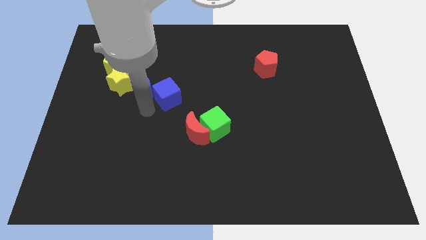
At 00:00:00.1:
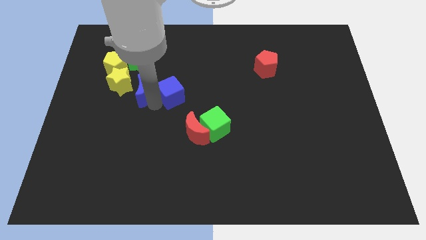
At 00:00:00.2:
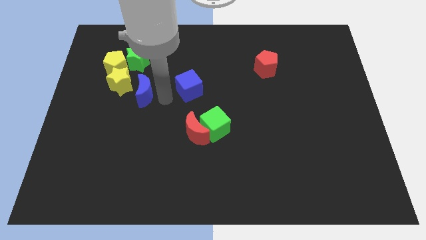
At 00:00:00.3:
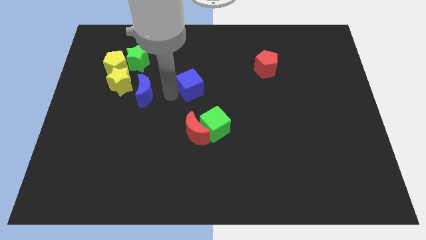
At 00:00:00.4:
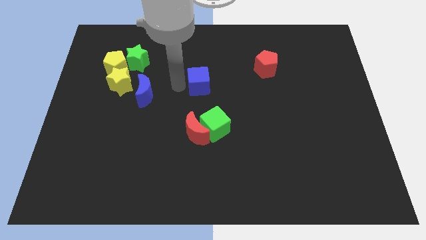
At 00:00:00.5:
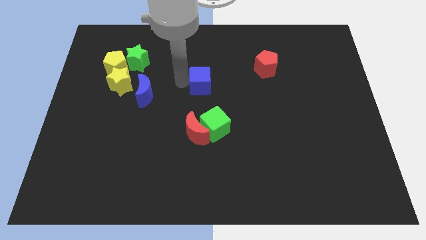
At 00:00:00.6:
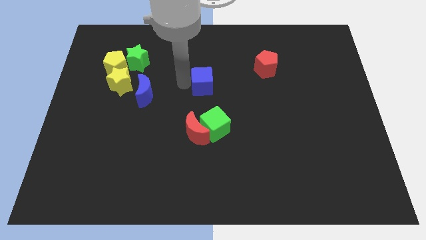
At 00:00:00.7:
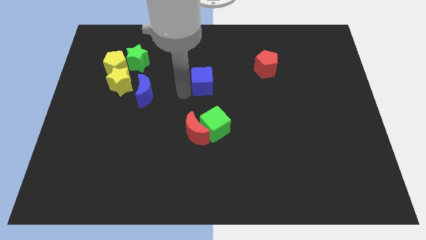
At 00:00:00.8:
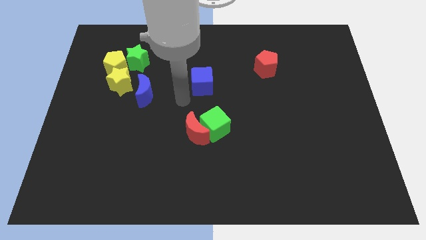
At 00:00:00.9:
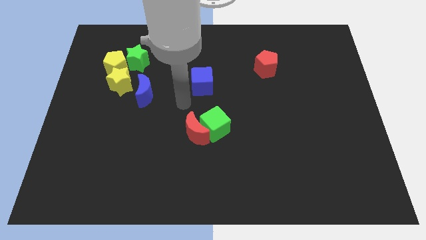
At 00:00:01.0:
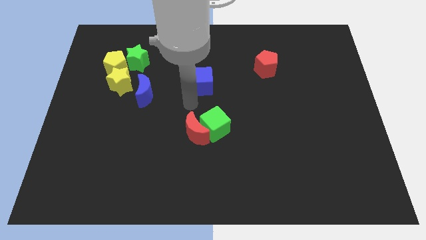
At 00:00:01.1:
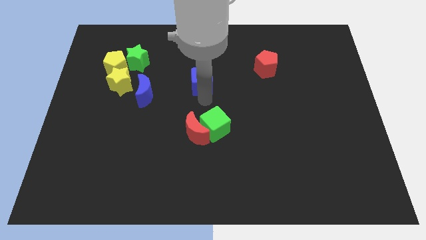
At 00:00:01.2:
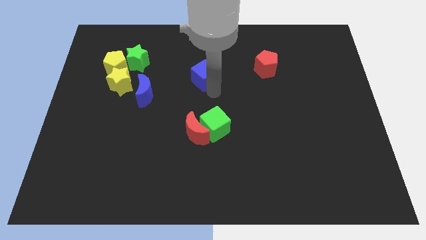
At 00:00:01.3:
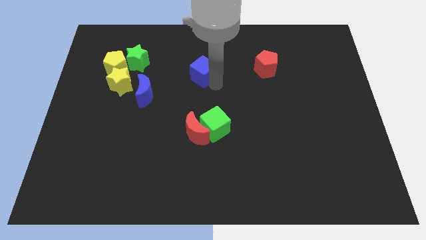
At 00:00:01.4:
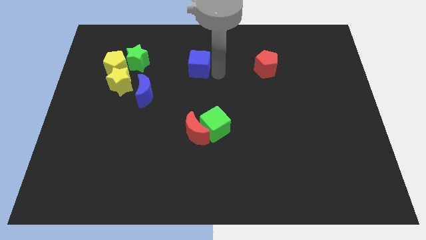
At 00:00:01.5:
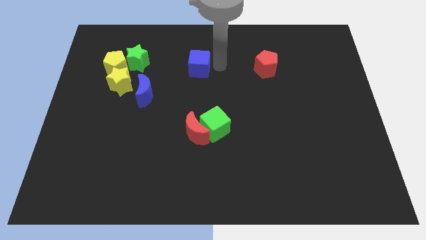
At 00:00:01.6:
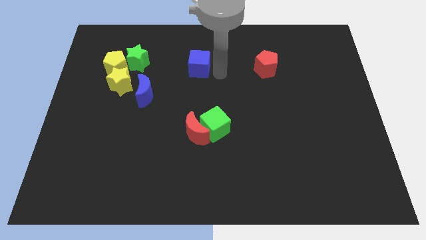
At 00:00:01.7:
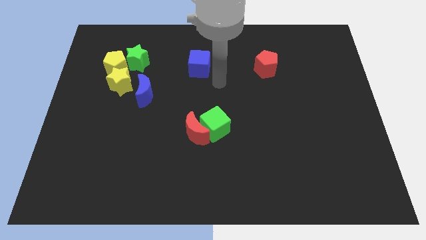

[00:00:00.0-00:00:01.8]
place the blue cube to the left of the red pentagon

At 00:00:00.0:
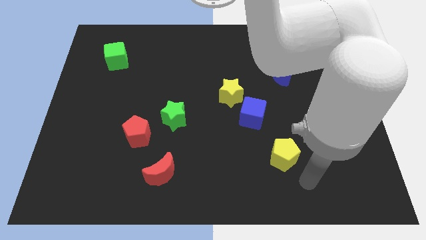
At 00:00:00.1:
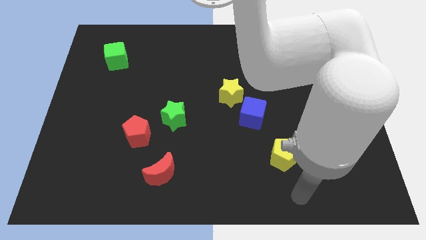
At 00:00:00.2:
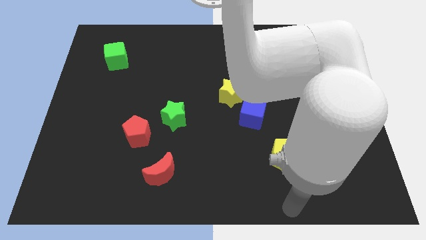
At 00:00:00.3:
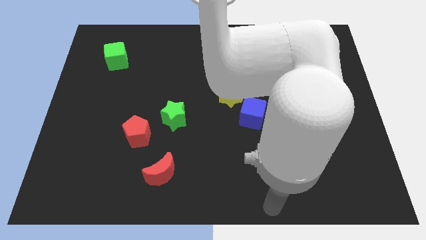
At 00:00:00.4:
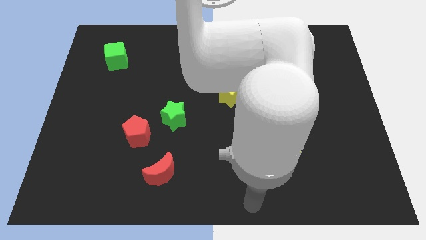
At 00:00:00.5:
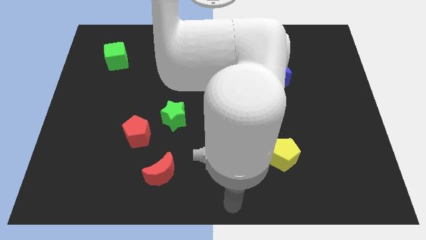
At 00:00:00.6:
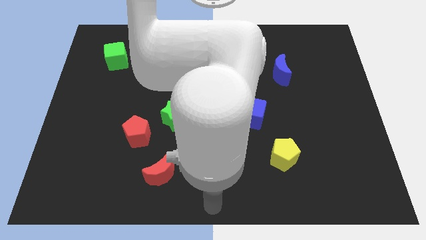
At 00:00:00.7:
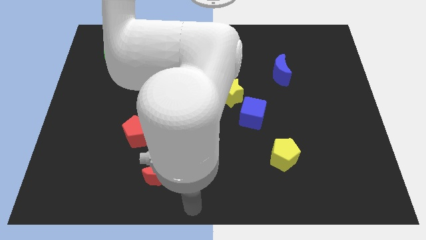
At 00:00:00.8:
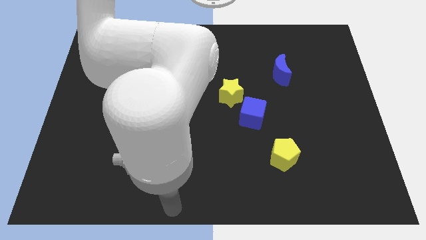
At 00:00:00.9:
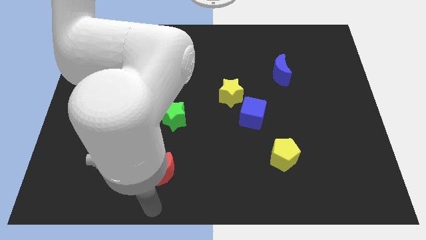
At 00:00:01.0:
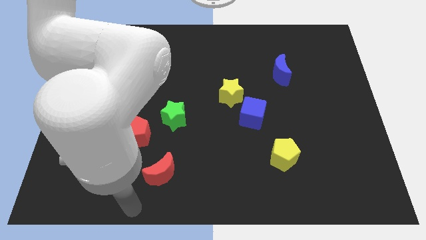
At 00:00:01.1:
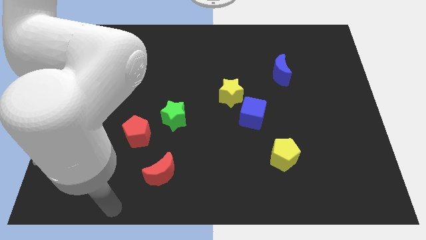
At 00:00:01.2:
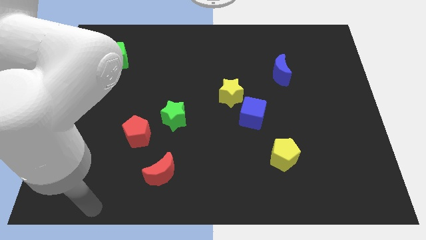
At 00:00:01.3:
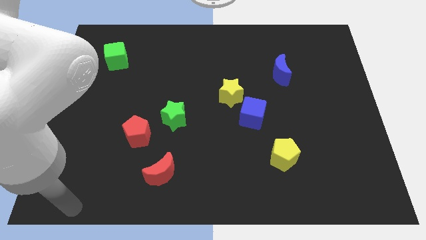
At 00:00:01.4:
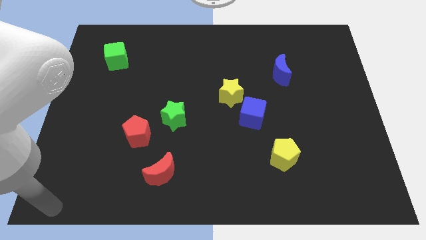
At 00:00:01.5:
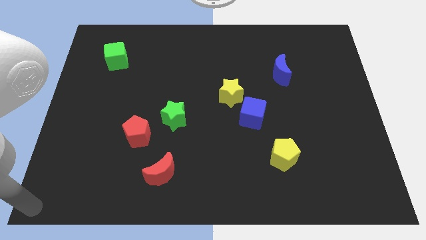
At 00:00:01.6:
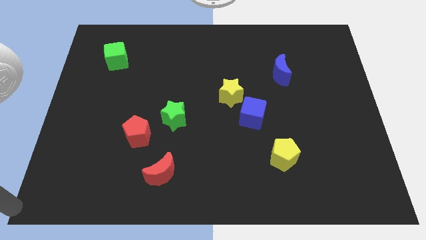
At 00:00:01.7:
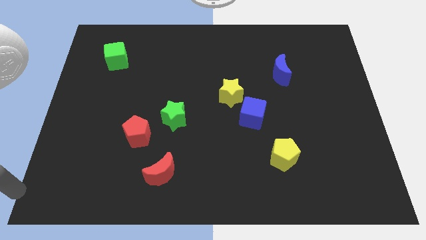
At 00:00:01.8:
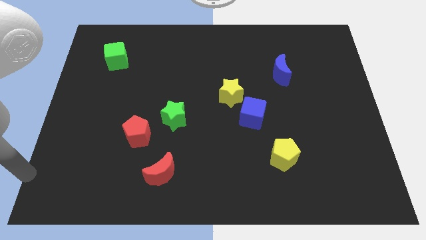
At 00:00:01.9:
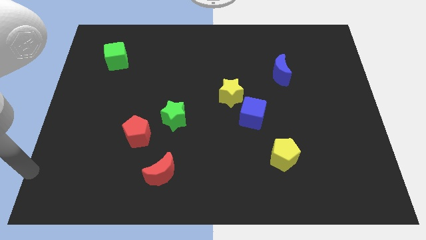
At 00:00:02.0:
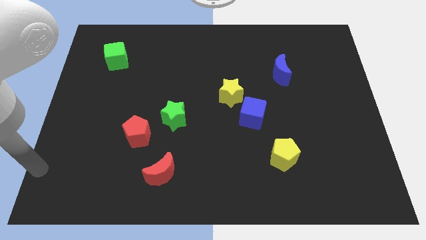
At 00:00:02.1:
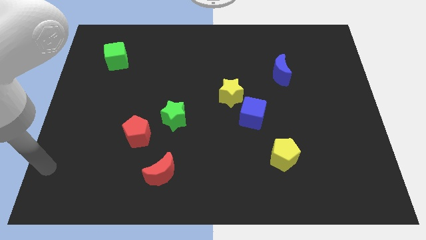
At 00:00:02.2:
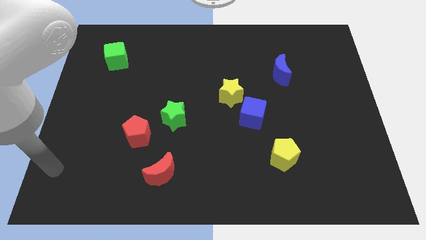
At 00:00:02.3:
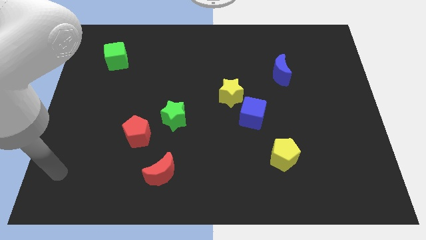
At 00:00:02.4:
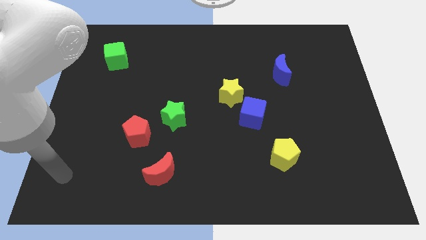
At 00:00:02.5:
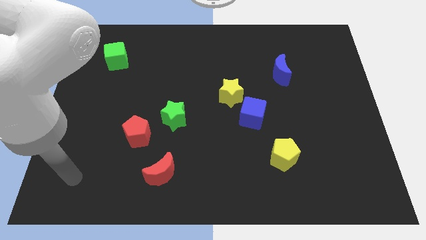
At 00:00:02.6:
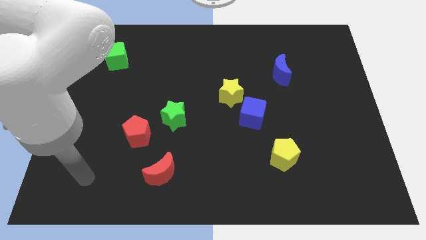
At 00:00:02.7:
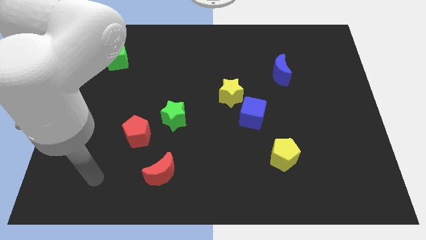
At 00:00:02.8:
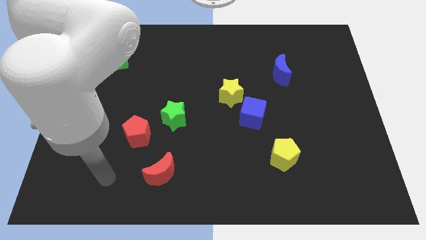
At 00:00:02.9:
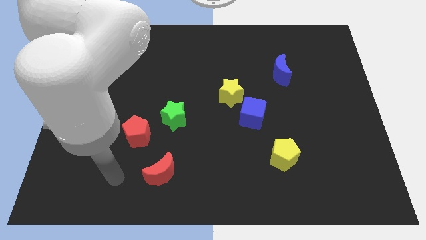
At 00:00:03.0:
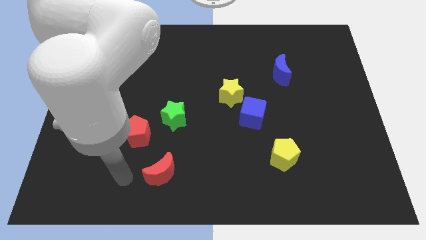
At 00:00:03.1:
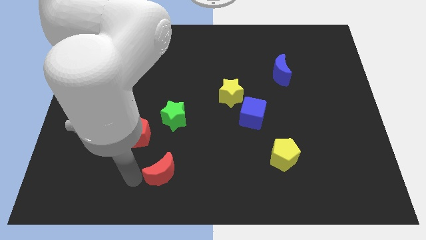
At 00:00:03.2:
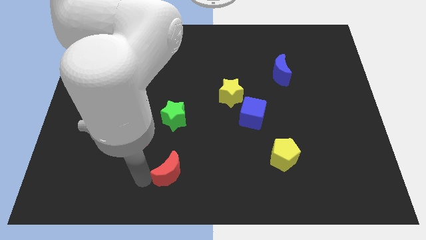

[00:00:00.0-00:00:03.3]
move your arm to the left side of the red moon

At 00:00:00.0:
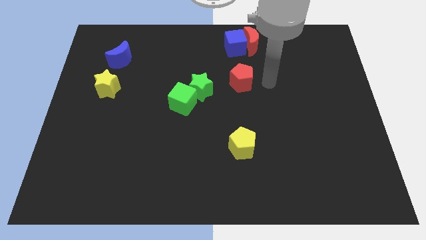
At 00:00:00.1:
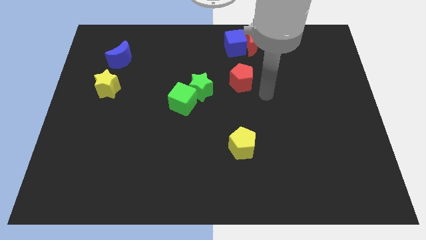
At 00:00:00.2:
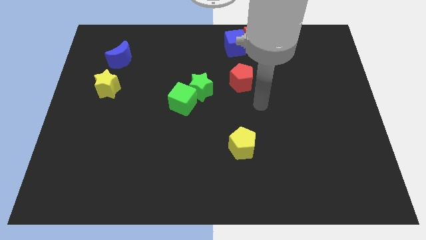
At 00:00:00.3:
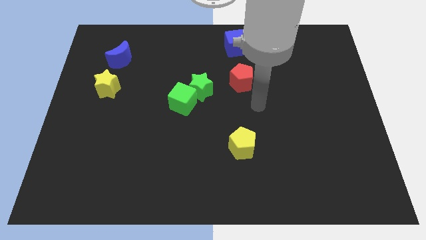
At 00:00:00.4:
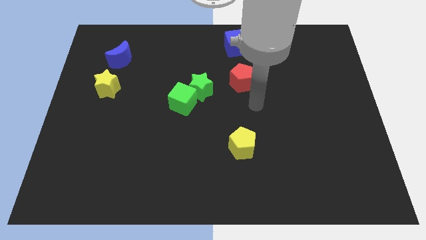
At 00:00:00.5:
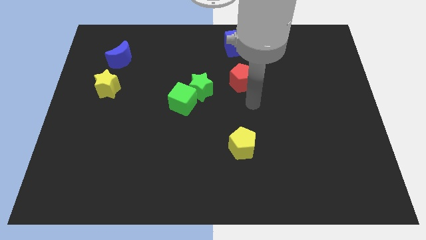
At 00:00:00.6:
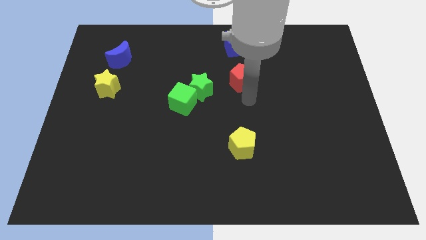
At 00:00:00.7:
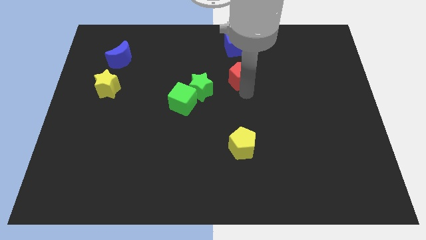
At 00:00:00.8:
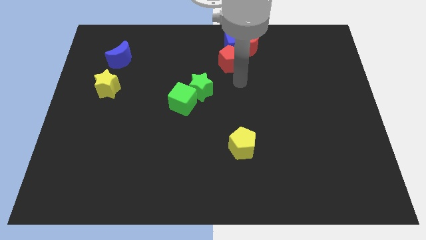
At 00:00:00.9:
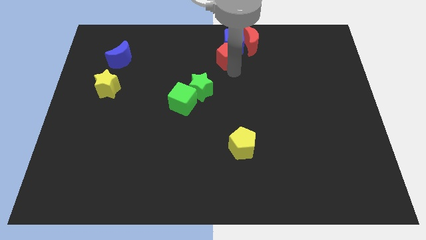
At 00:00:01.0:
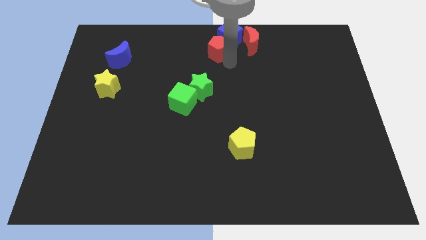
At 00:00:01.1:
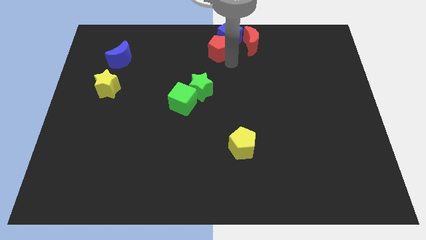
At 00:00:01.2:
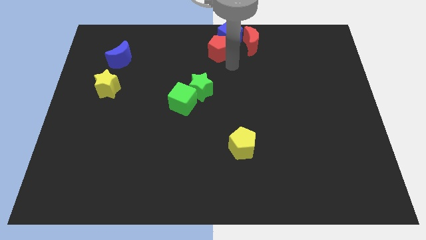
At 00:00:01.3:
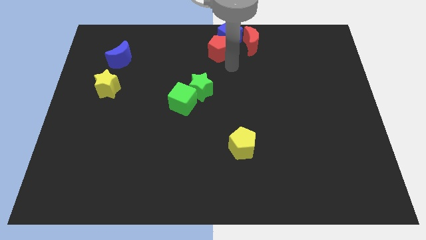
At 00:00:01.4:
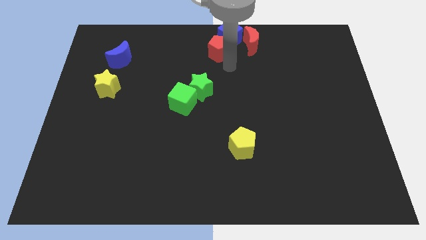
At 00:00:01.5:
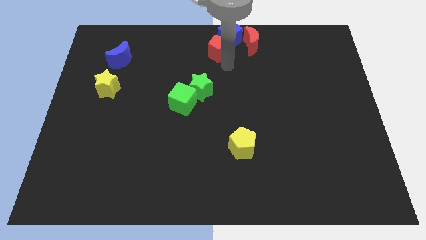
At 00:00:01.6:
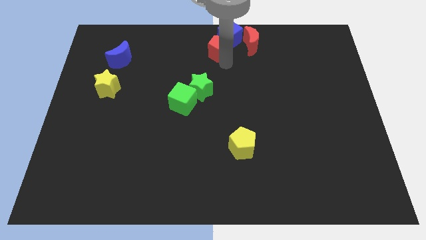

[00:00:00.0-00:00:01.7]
move the red pentagon into the blue cube

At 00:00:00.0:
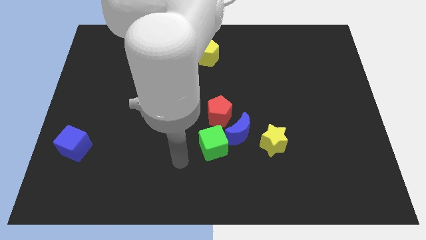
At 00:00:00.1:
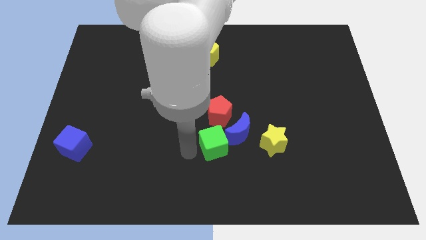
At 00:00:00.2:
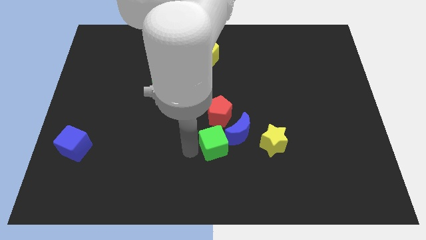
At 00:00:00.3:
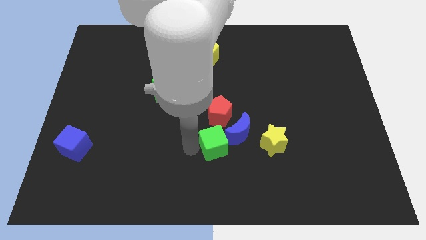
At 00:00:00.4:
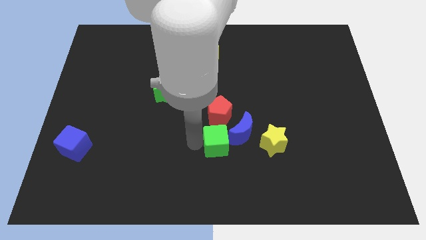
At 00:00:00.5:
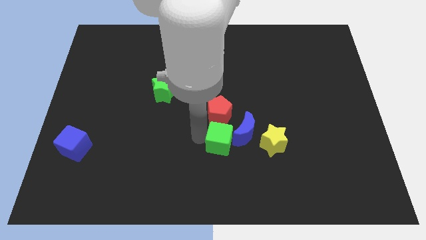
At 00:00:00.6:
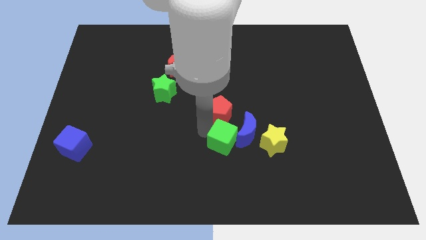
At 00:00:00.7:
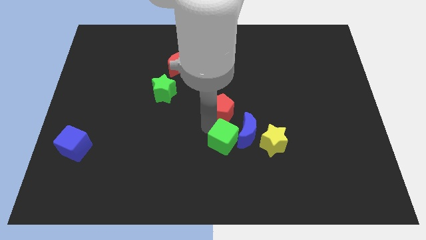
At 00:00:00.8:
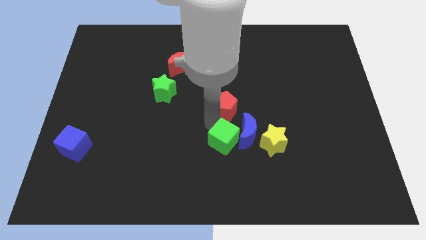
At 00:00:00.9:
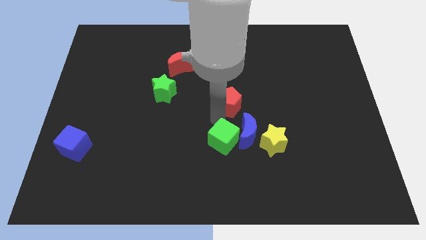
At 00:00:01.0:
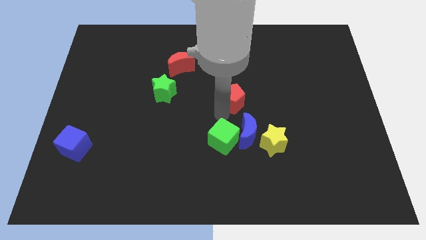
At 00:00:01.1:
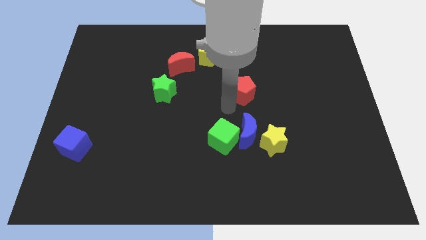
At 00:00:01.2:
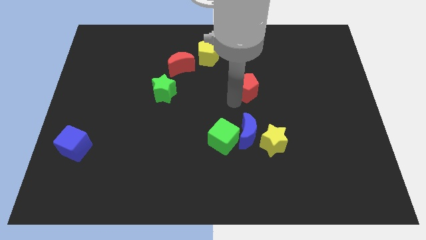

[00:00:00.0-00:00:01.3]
push the red pentagon above the blue crescent

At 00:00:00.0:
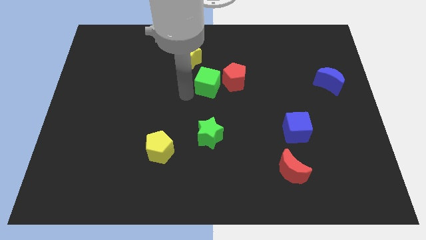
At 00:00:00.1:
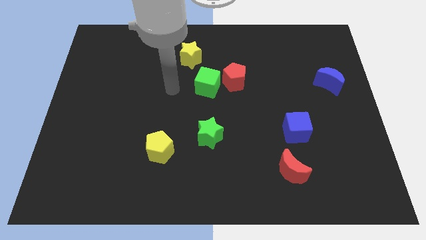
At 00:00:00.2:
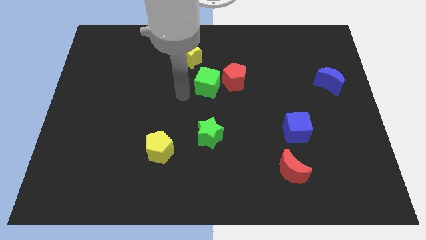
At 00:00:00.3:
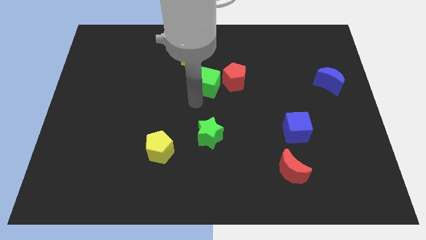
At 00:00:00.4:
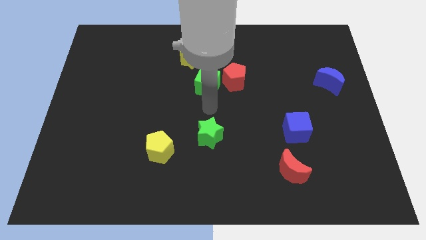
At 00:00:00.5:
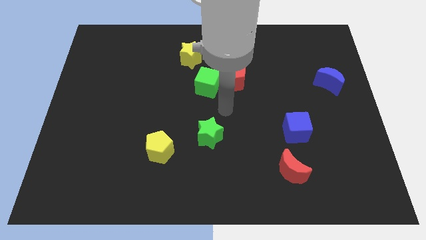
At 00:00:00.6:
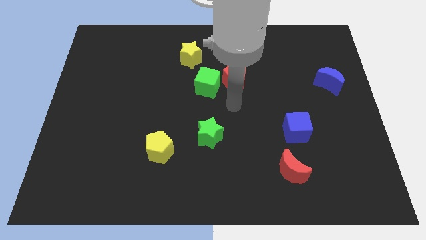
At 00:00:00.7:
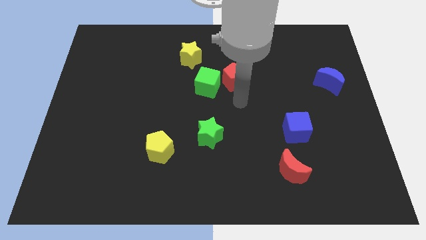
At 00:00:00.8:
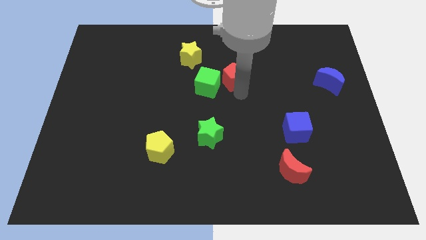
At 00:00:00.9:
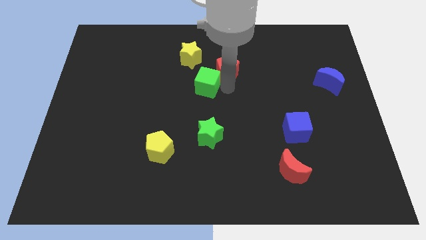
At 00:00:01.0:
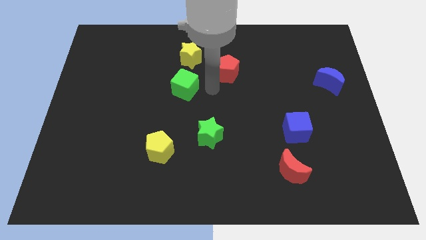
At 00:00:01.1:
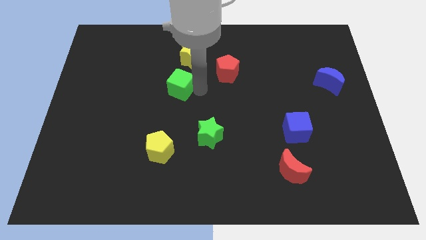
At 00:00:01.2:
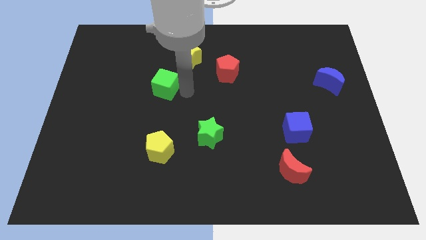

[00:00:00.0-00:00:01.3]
push green cube to the top of yellow pentagon
